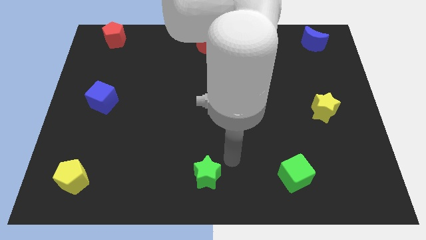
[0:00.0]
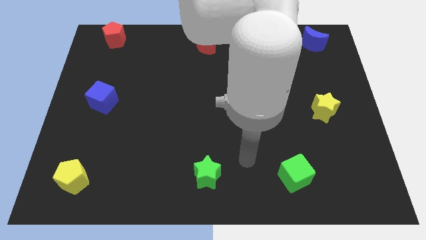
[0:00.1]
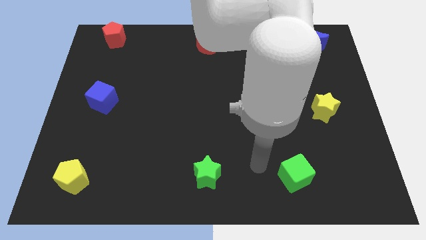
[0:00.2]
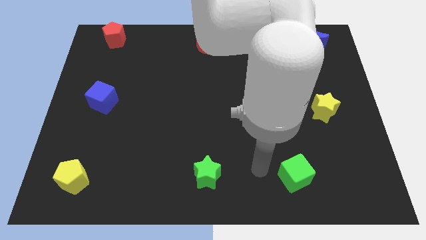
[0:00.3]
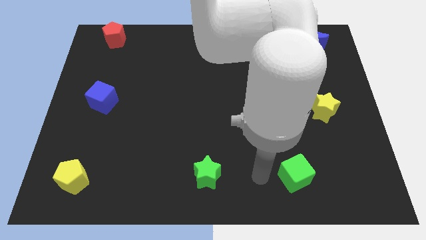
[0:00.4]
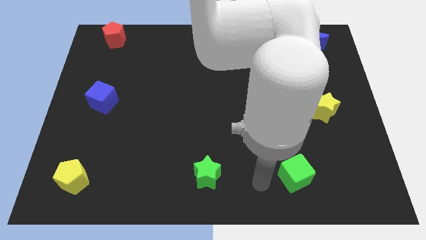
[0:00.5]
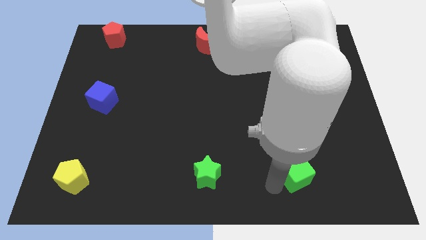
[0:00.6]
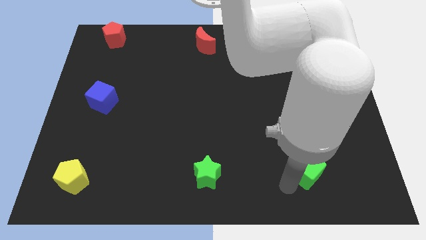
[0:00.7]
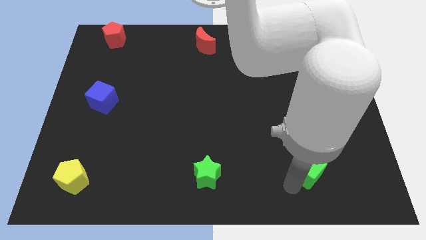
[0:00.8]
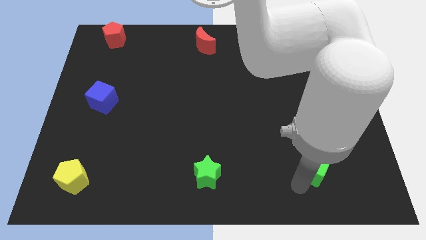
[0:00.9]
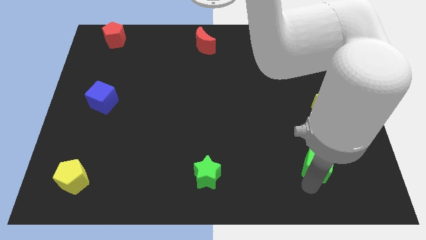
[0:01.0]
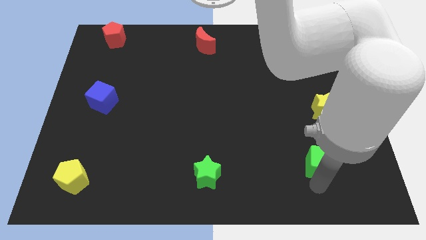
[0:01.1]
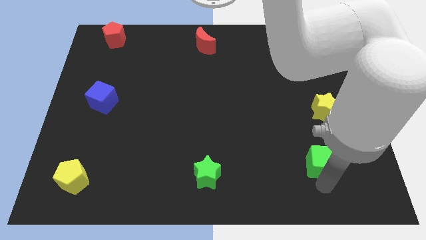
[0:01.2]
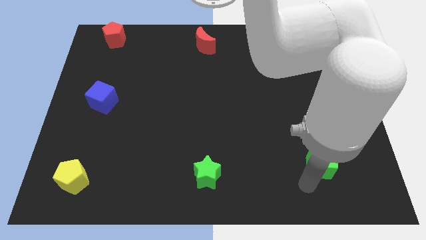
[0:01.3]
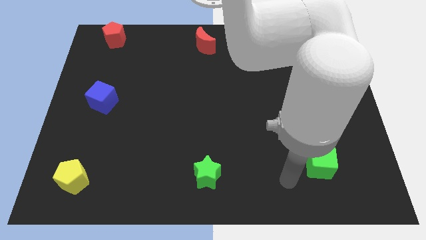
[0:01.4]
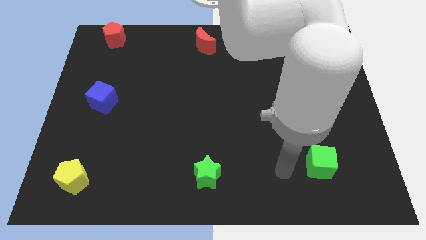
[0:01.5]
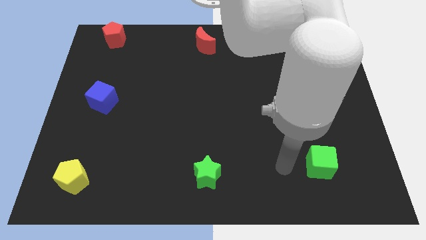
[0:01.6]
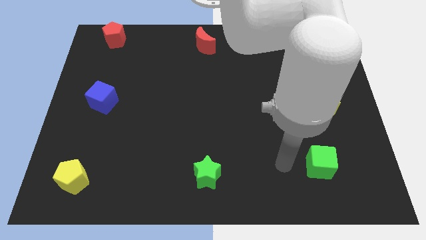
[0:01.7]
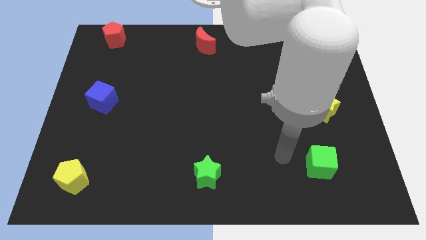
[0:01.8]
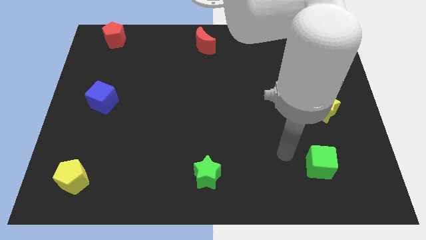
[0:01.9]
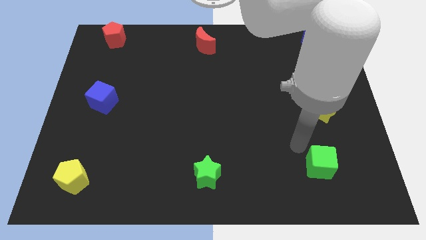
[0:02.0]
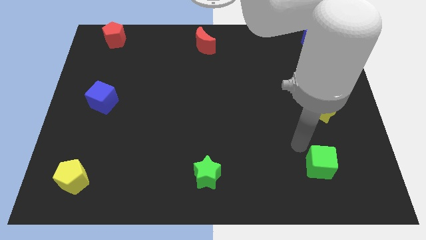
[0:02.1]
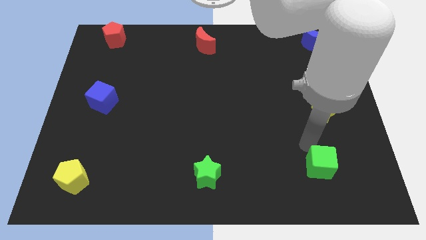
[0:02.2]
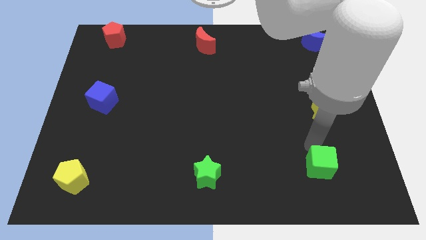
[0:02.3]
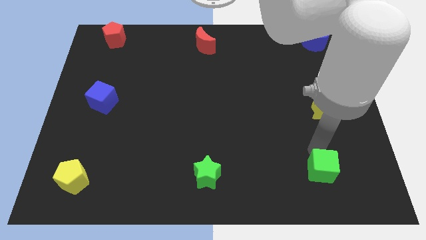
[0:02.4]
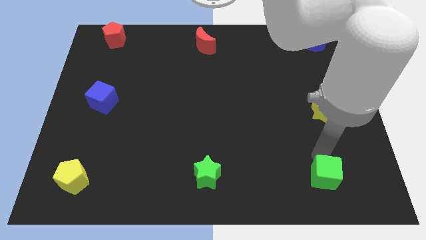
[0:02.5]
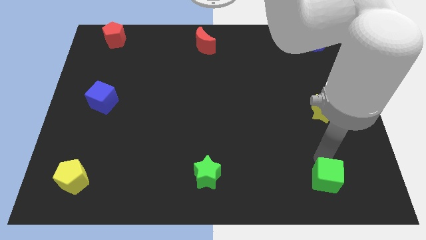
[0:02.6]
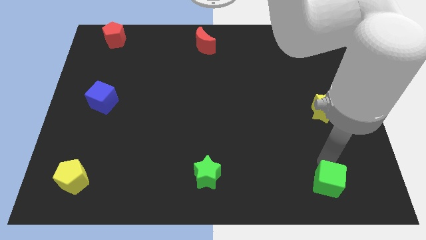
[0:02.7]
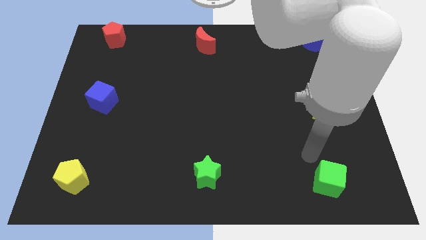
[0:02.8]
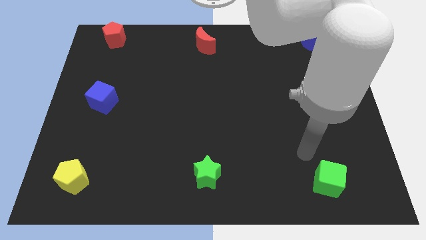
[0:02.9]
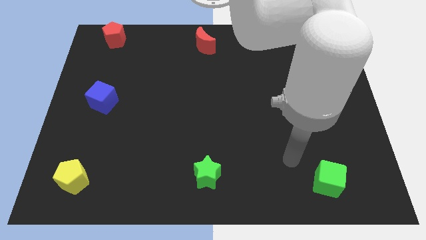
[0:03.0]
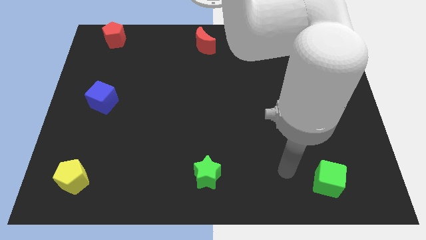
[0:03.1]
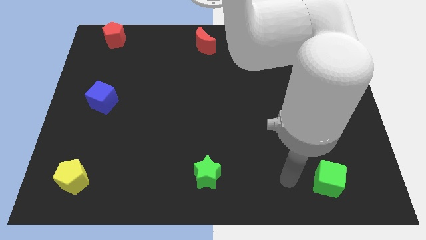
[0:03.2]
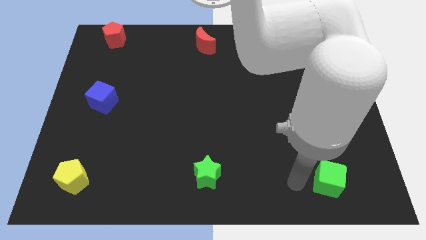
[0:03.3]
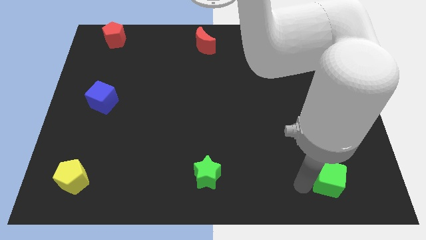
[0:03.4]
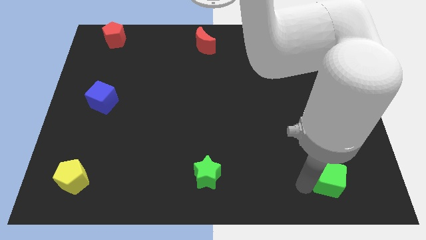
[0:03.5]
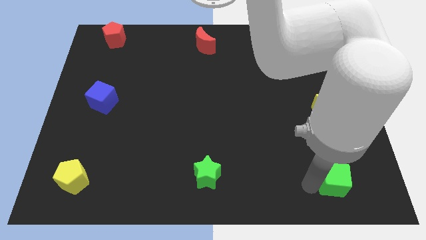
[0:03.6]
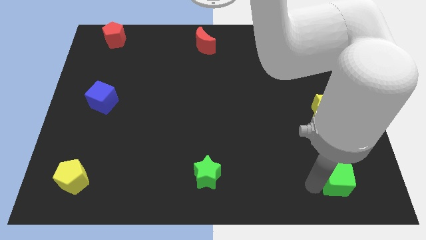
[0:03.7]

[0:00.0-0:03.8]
place blue cube below yellow star

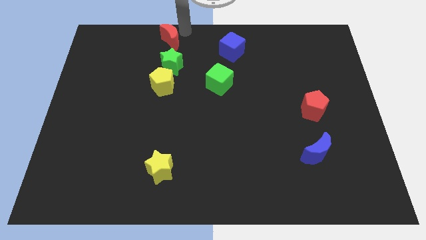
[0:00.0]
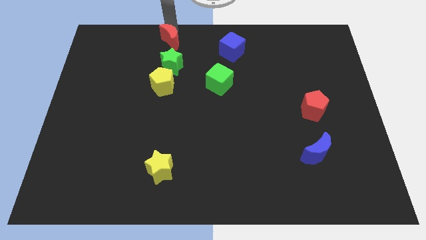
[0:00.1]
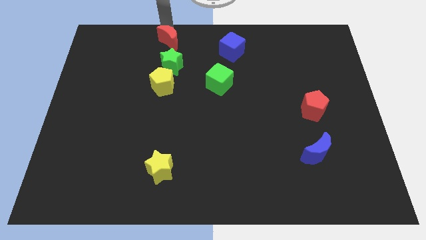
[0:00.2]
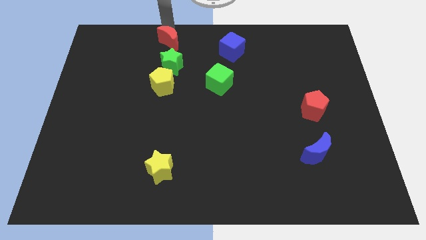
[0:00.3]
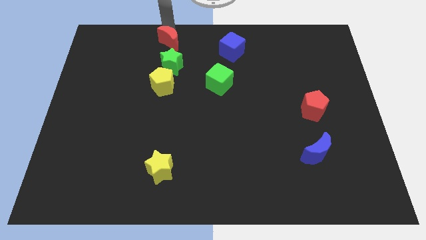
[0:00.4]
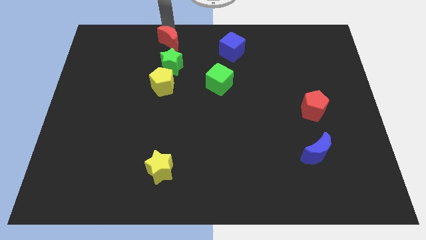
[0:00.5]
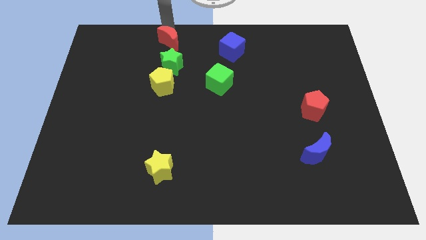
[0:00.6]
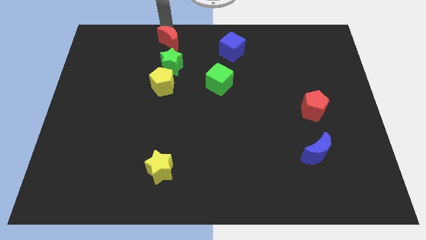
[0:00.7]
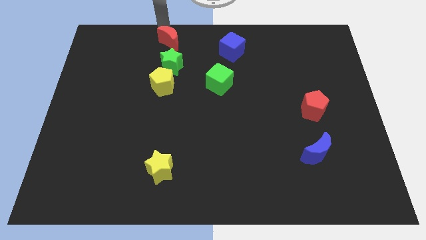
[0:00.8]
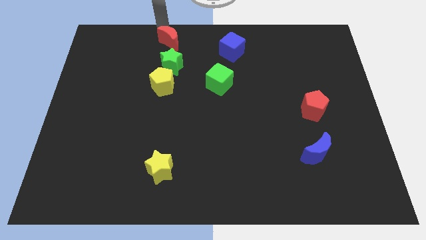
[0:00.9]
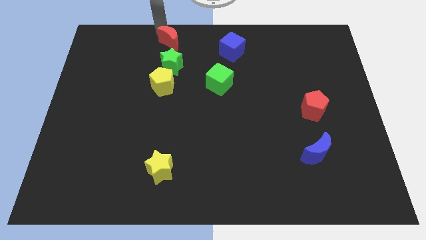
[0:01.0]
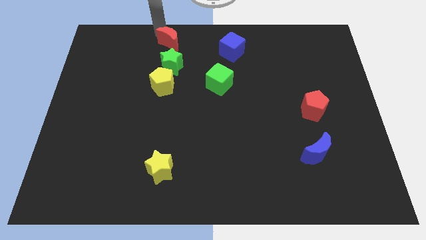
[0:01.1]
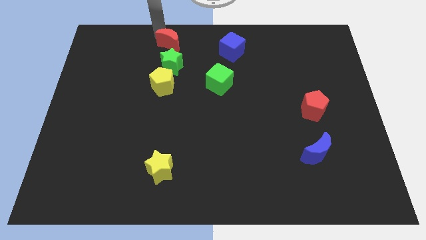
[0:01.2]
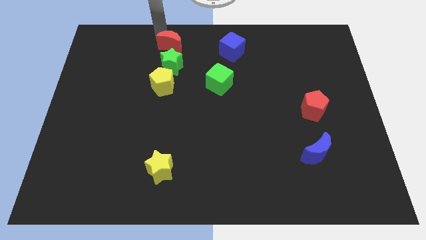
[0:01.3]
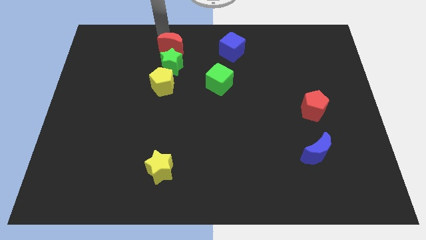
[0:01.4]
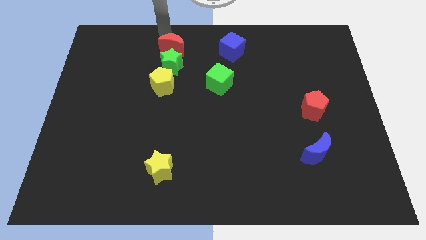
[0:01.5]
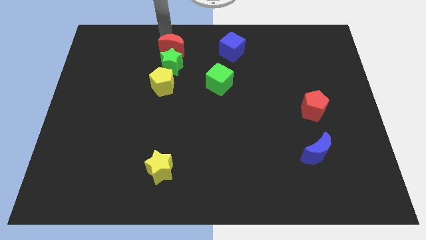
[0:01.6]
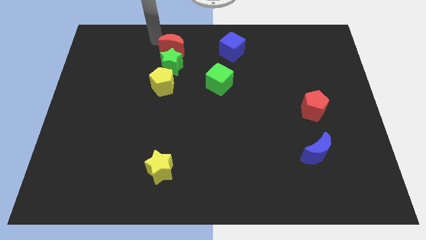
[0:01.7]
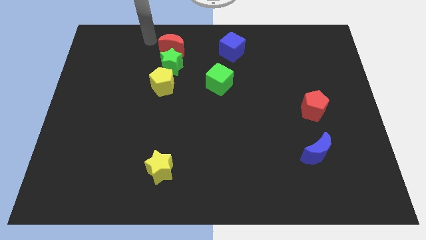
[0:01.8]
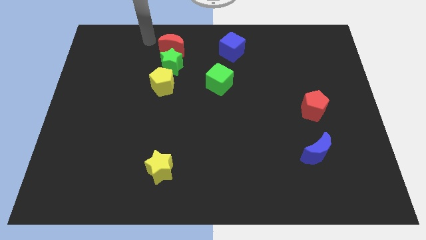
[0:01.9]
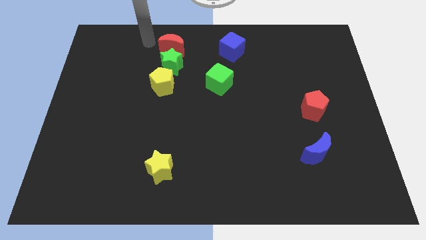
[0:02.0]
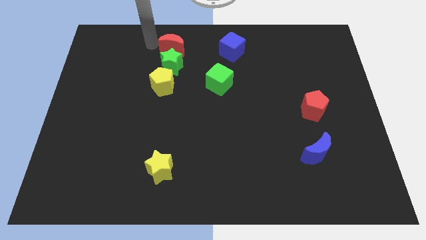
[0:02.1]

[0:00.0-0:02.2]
put the red moon to the top side of the green star

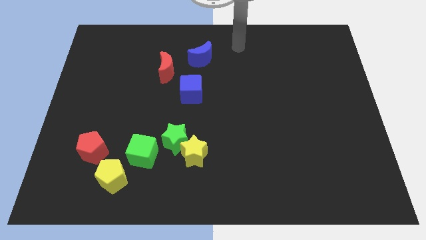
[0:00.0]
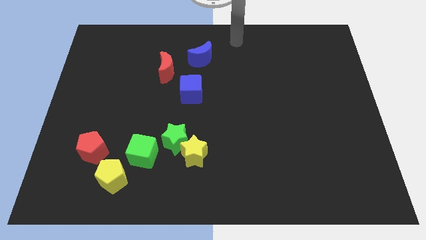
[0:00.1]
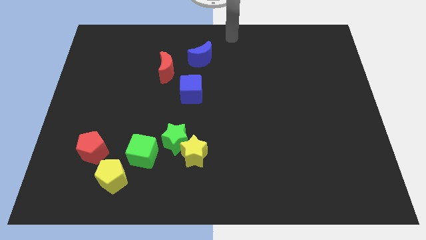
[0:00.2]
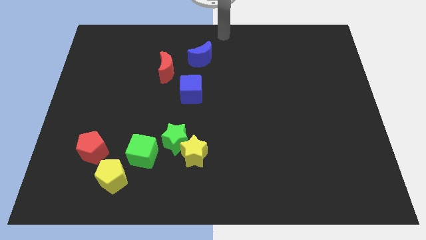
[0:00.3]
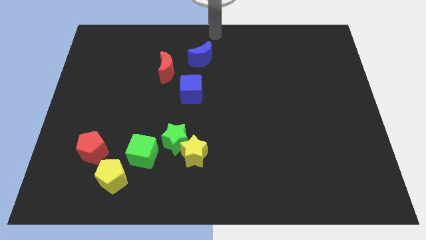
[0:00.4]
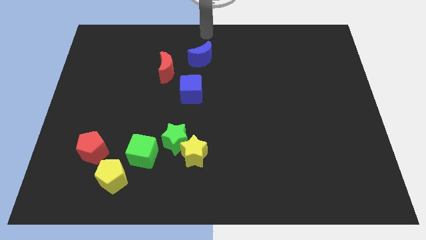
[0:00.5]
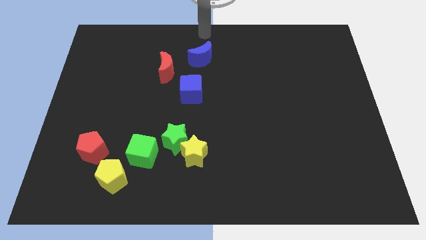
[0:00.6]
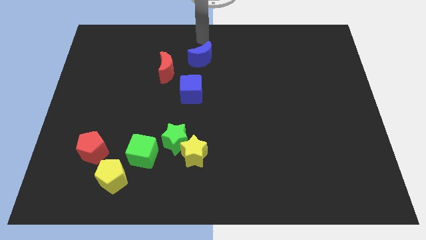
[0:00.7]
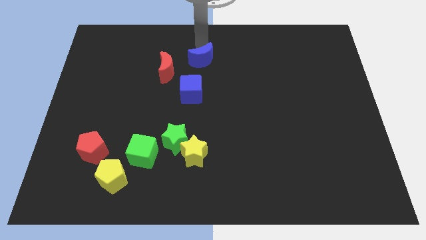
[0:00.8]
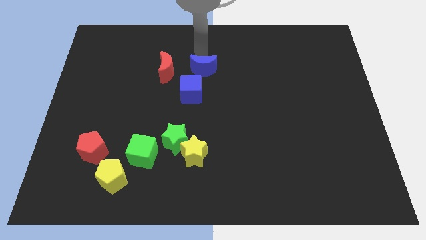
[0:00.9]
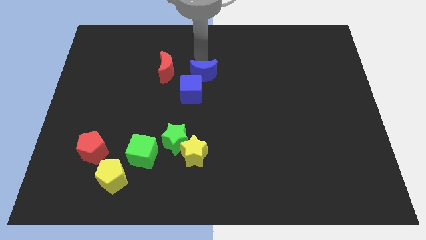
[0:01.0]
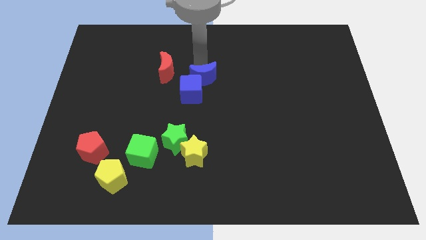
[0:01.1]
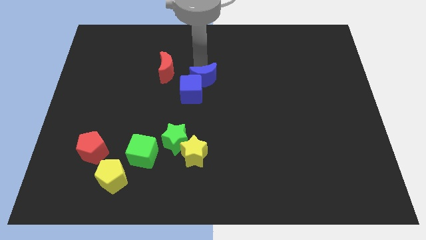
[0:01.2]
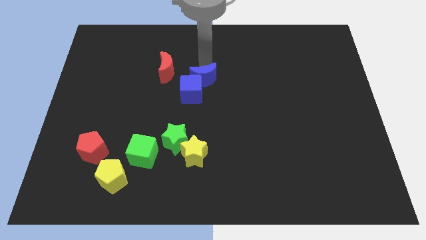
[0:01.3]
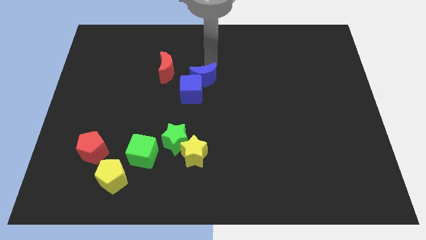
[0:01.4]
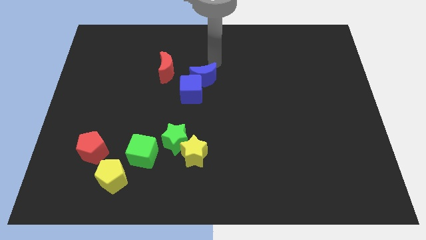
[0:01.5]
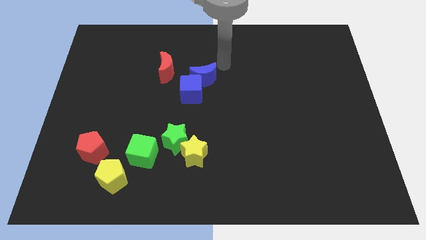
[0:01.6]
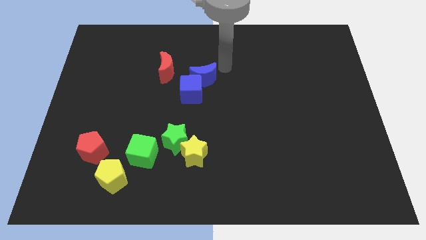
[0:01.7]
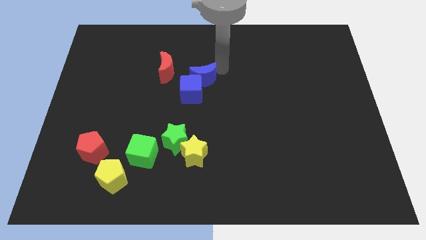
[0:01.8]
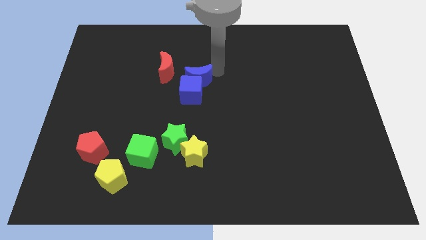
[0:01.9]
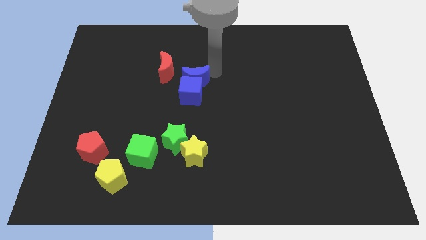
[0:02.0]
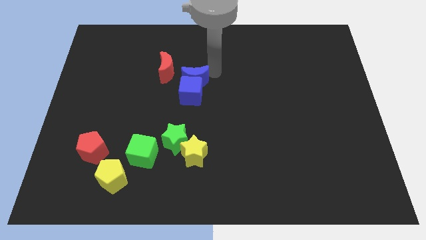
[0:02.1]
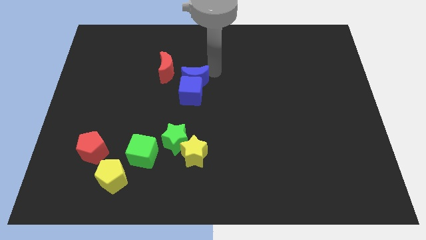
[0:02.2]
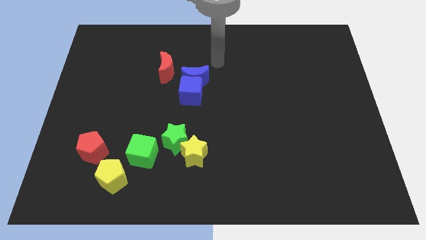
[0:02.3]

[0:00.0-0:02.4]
move the blue crescent to the top of the blue cube

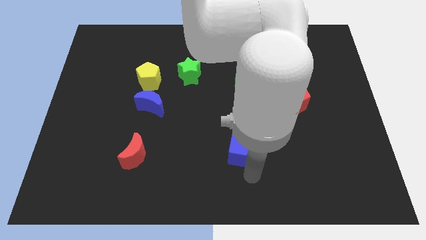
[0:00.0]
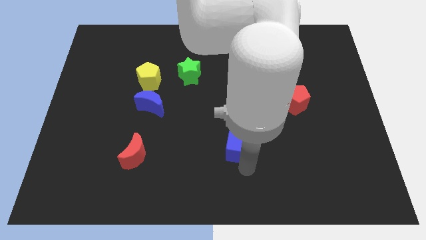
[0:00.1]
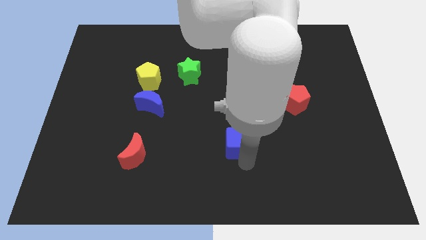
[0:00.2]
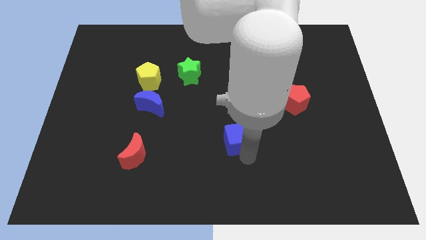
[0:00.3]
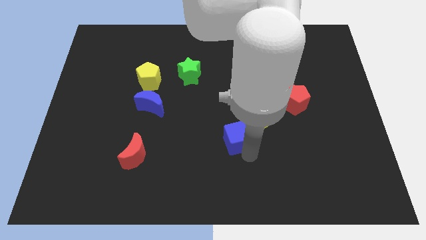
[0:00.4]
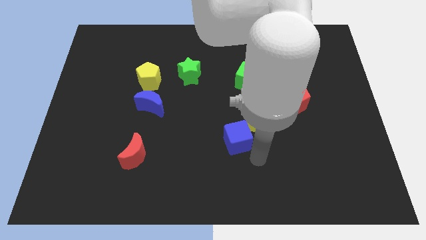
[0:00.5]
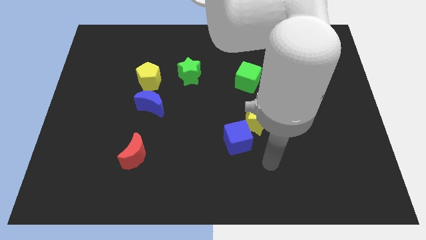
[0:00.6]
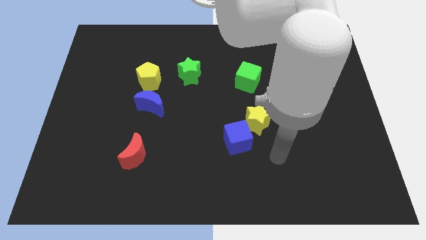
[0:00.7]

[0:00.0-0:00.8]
push the blue cube diagonally left below yellow star
